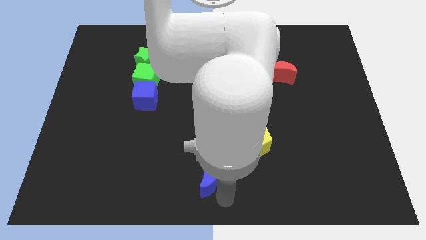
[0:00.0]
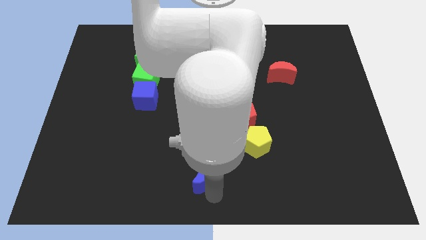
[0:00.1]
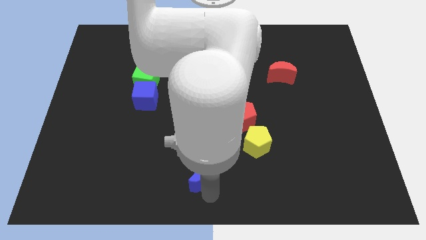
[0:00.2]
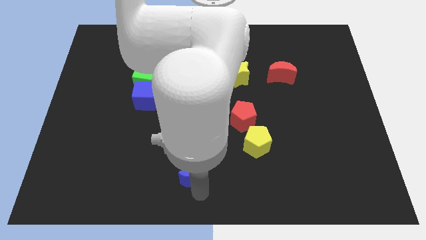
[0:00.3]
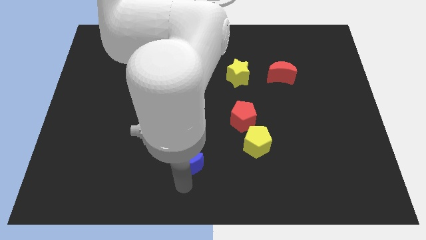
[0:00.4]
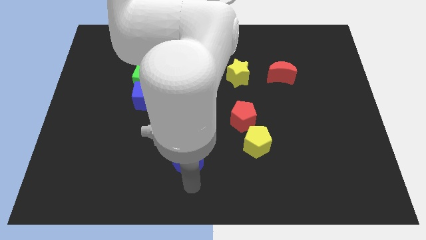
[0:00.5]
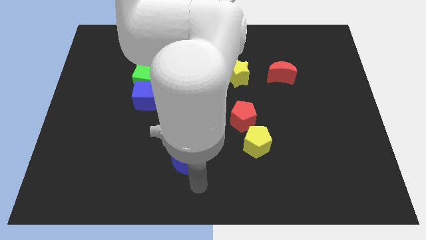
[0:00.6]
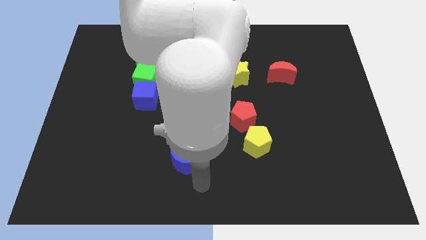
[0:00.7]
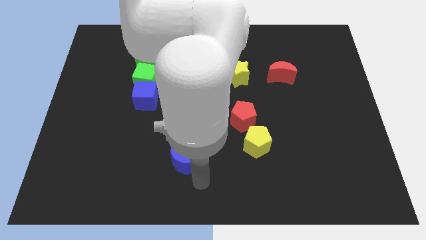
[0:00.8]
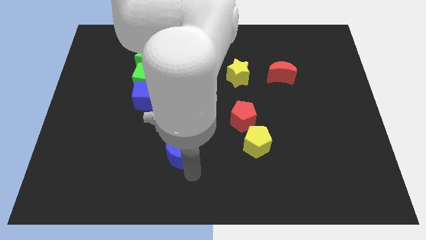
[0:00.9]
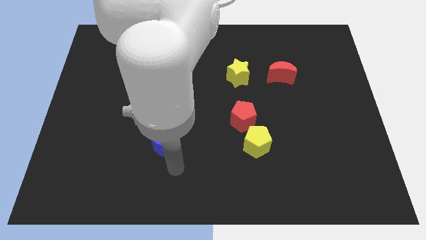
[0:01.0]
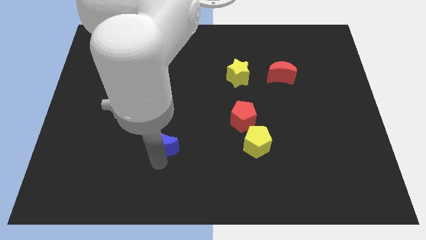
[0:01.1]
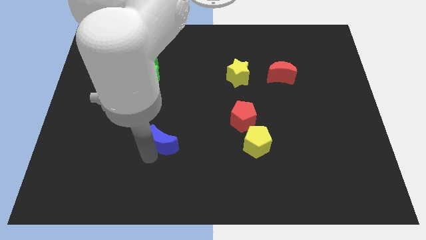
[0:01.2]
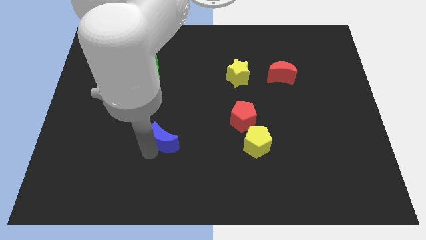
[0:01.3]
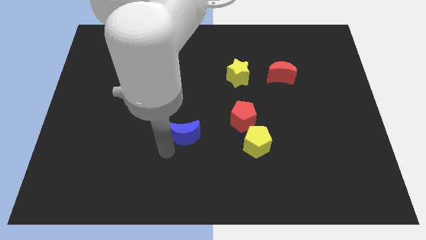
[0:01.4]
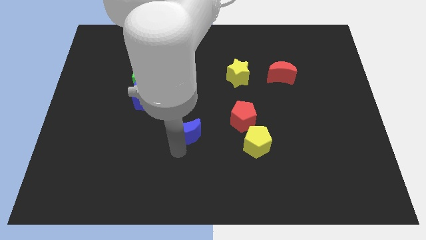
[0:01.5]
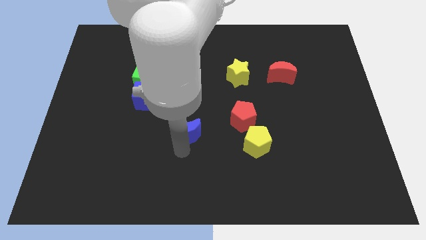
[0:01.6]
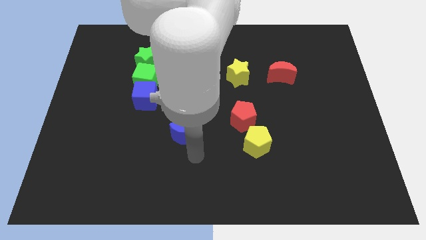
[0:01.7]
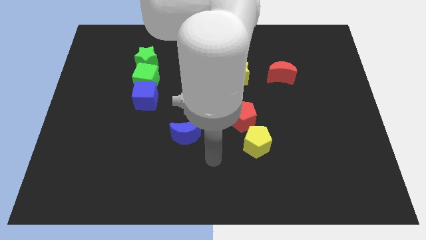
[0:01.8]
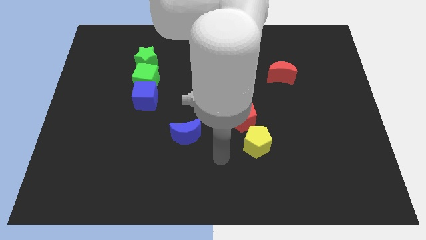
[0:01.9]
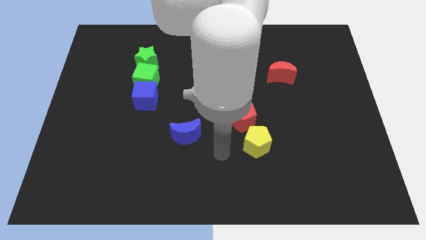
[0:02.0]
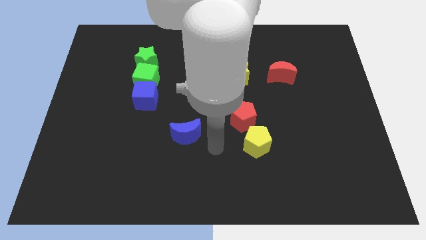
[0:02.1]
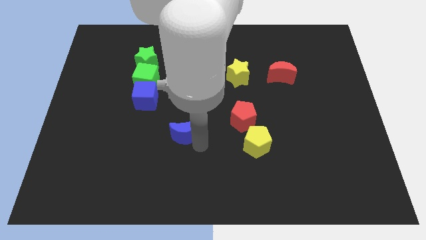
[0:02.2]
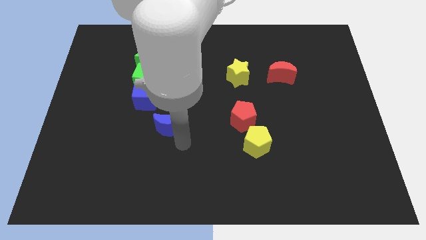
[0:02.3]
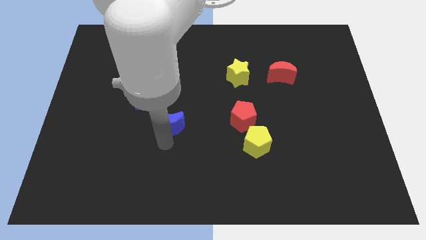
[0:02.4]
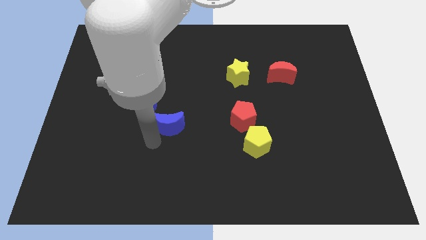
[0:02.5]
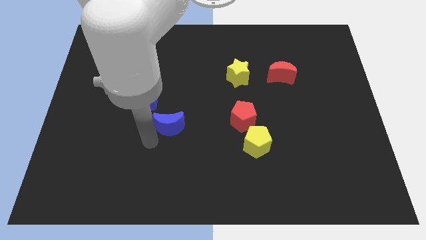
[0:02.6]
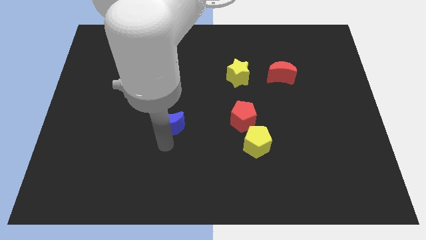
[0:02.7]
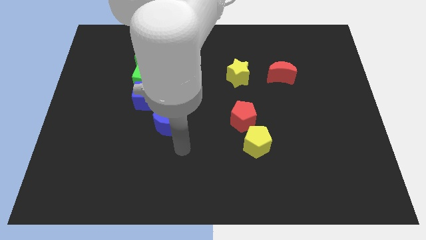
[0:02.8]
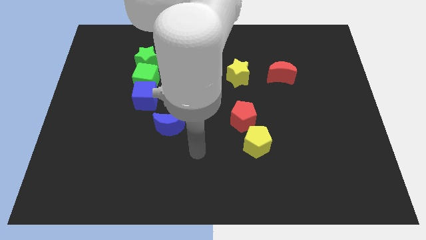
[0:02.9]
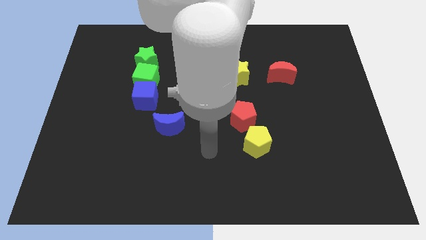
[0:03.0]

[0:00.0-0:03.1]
put the blue crescent at the left side of the red pentagon

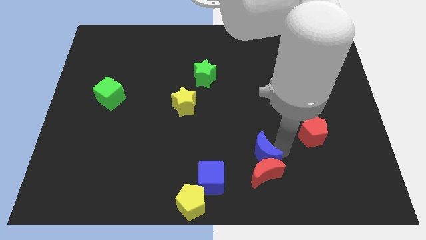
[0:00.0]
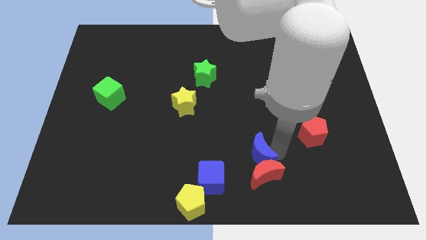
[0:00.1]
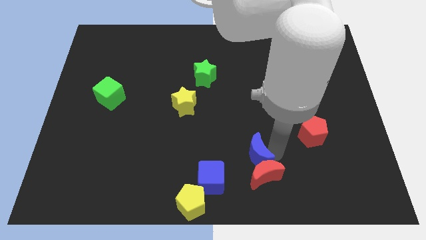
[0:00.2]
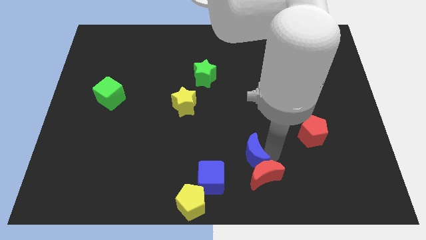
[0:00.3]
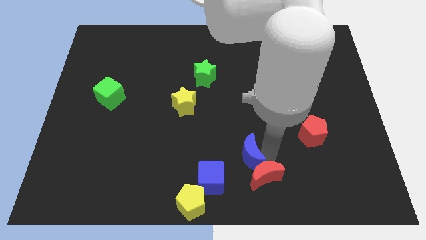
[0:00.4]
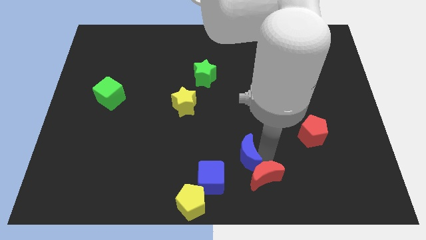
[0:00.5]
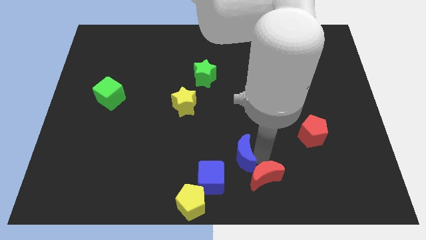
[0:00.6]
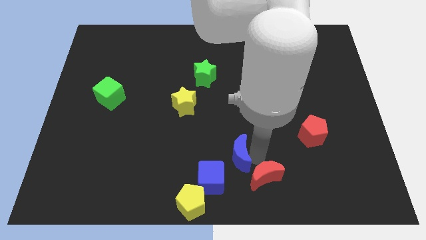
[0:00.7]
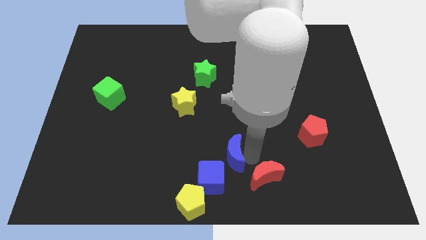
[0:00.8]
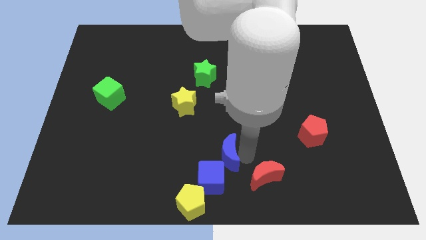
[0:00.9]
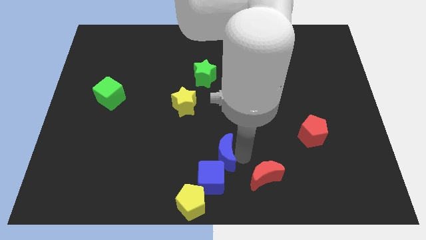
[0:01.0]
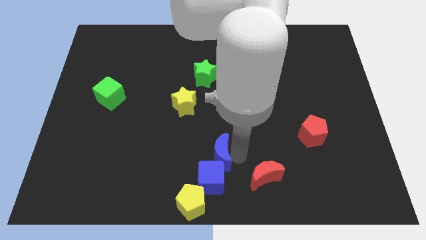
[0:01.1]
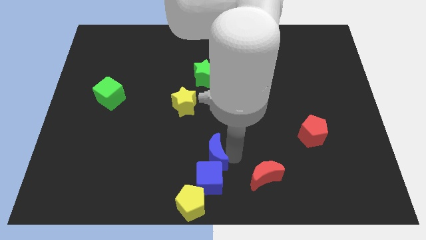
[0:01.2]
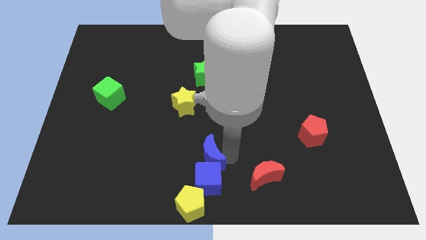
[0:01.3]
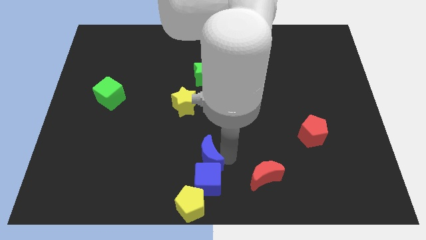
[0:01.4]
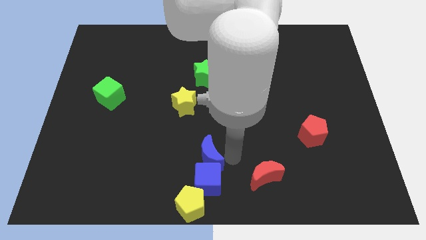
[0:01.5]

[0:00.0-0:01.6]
separate the blue moon from the red moon

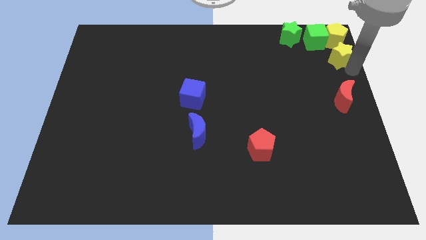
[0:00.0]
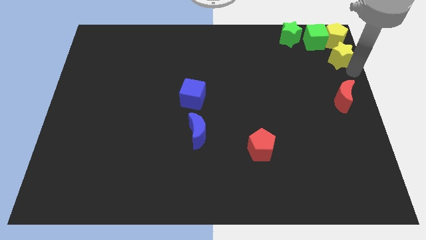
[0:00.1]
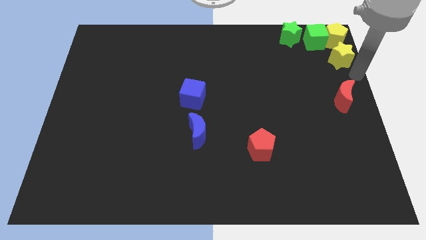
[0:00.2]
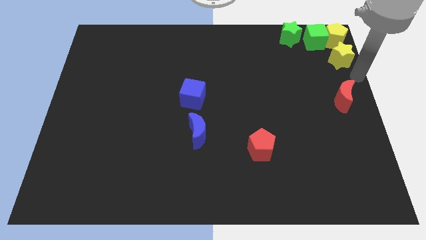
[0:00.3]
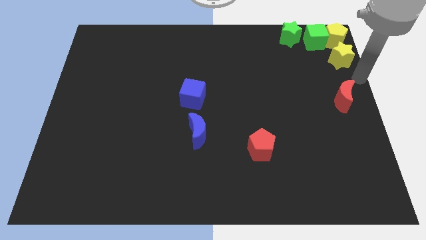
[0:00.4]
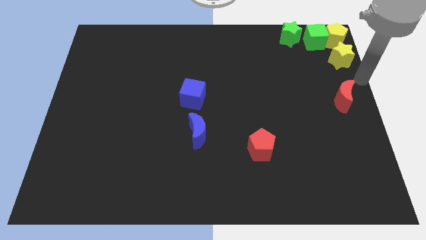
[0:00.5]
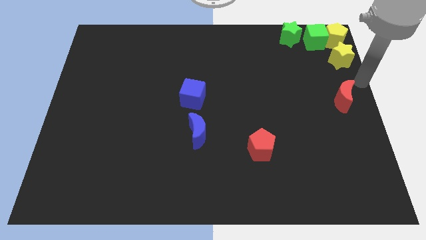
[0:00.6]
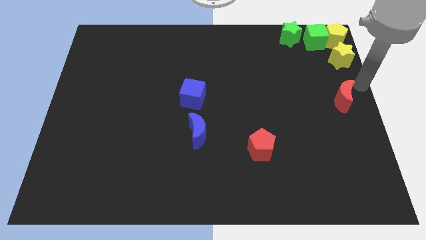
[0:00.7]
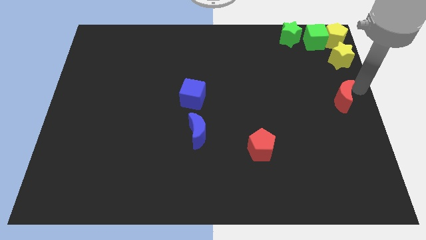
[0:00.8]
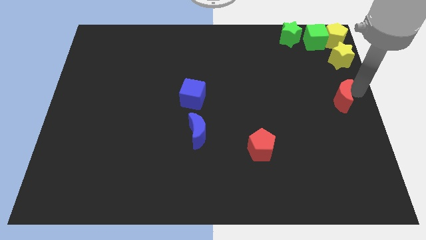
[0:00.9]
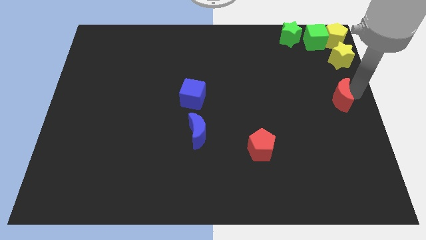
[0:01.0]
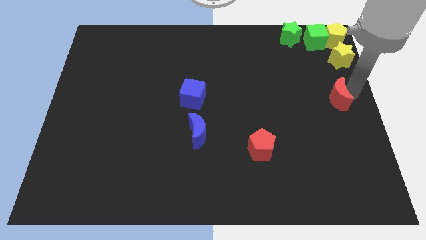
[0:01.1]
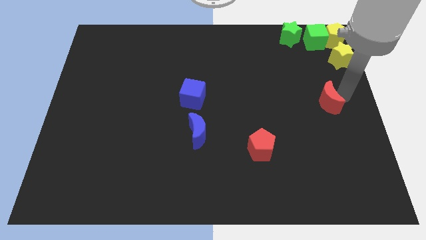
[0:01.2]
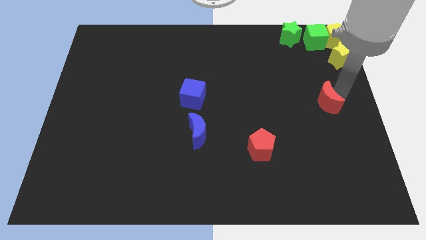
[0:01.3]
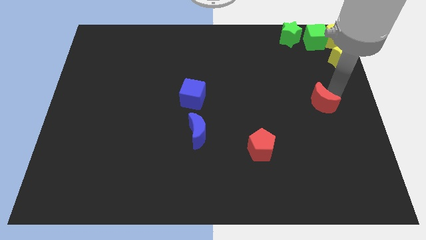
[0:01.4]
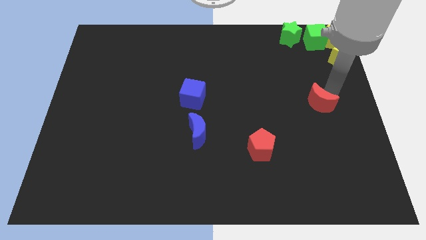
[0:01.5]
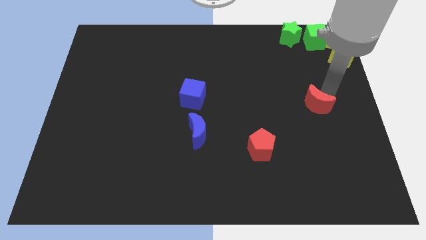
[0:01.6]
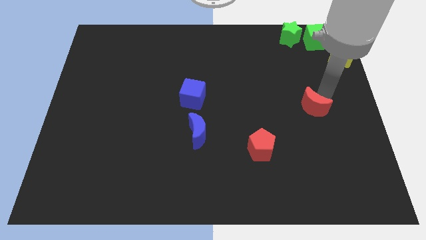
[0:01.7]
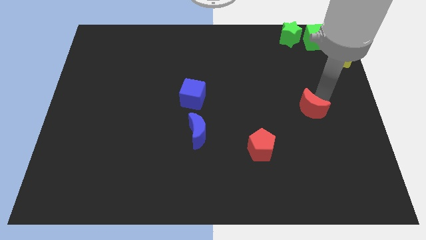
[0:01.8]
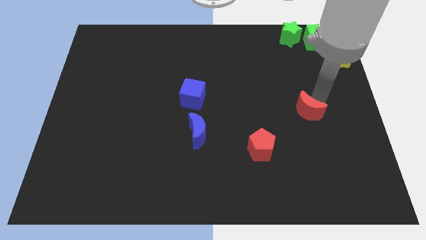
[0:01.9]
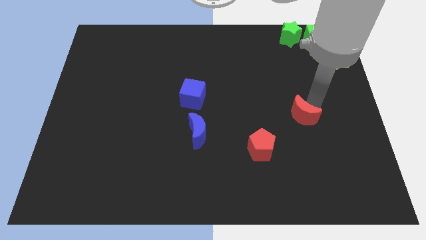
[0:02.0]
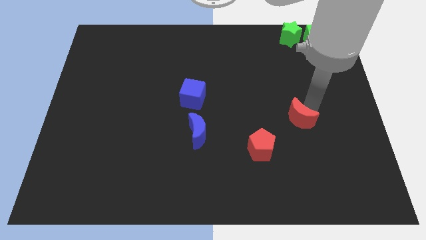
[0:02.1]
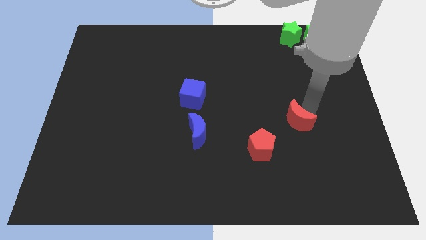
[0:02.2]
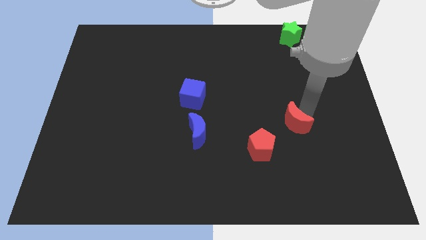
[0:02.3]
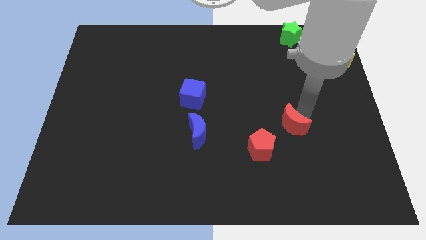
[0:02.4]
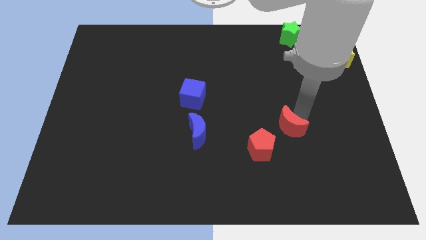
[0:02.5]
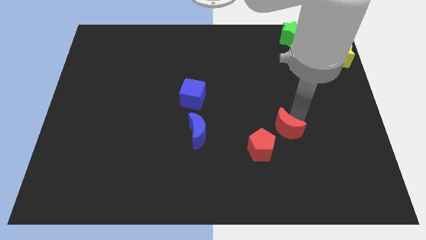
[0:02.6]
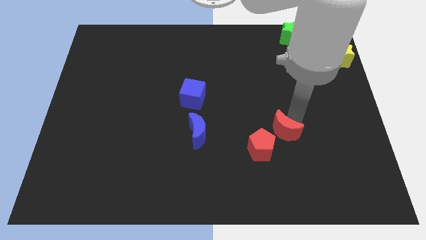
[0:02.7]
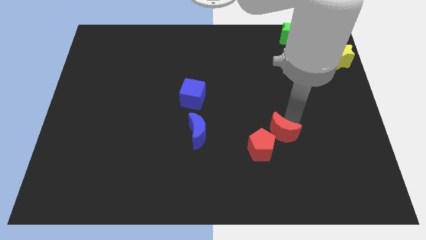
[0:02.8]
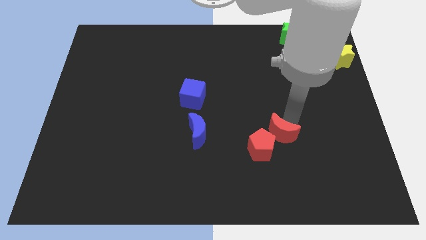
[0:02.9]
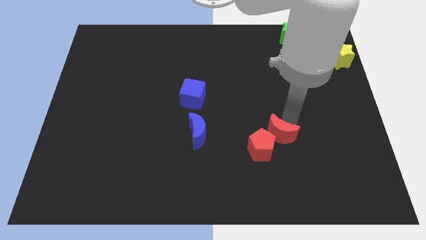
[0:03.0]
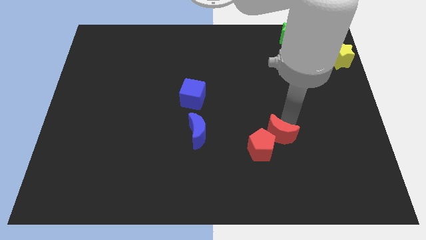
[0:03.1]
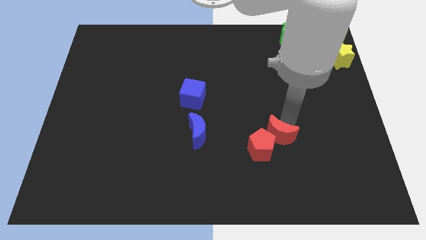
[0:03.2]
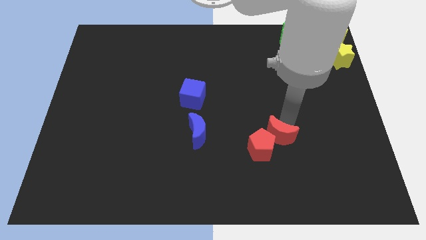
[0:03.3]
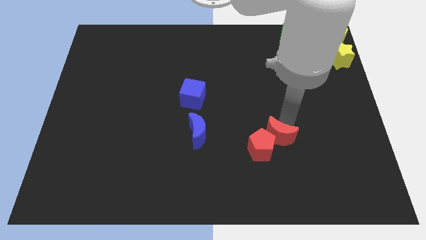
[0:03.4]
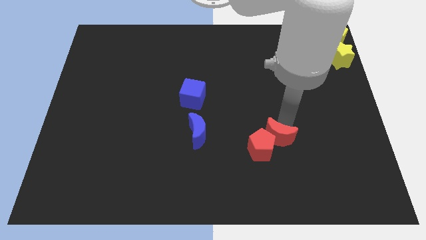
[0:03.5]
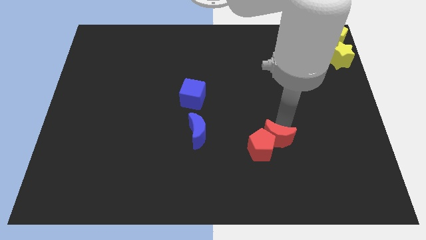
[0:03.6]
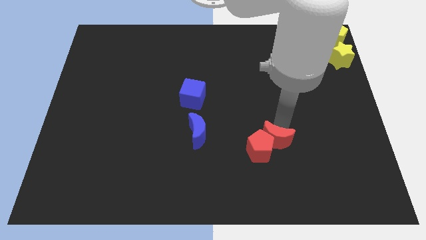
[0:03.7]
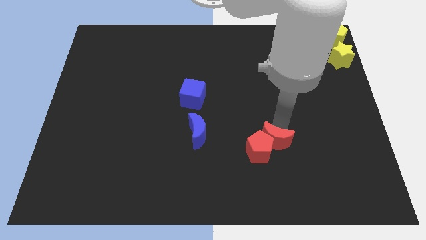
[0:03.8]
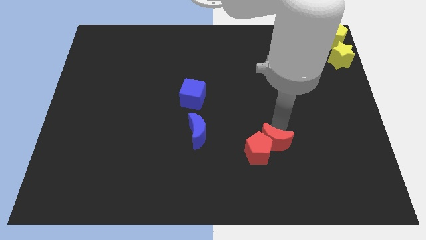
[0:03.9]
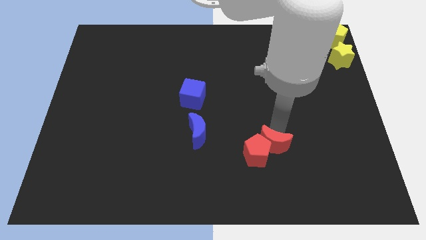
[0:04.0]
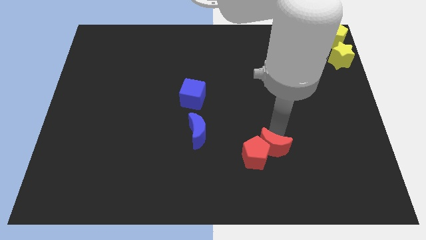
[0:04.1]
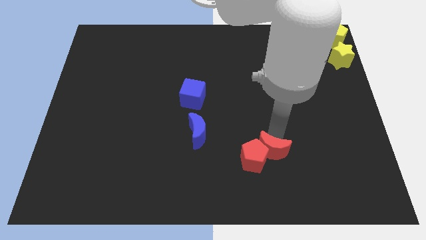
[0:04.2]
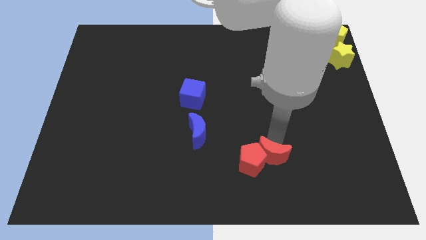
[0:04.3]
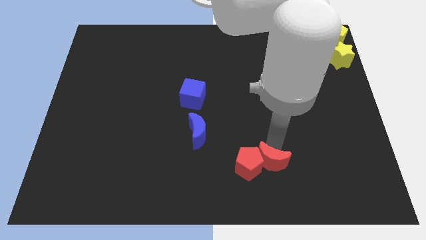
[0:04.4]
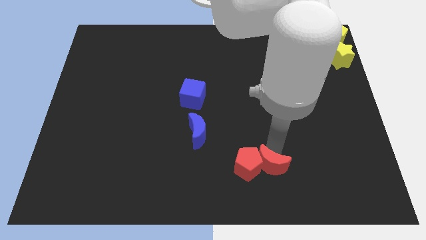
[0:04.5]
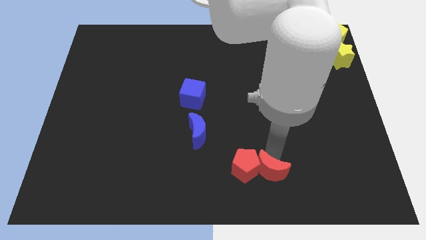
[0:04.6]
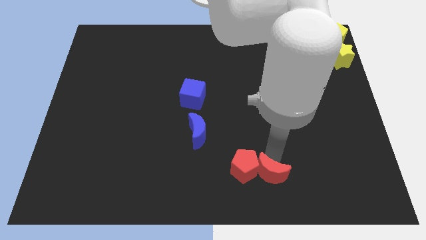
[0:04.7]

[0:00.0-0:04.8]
move the red blocks towards the bottom side of the board
